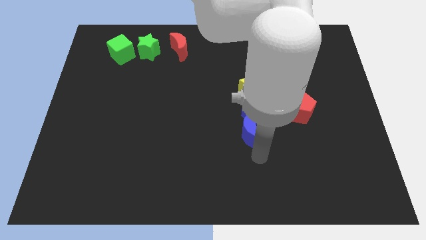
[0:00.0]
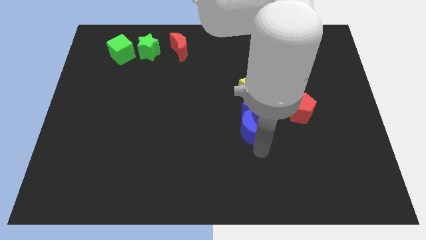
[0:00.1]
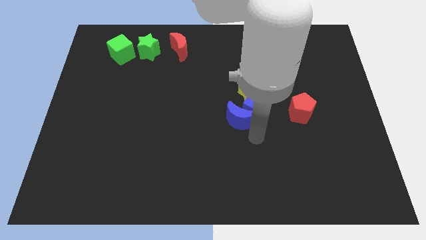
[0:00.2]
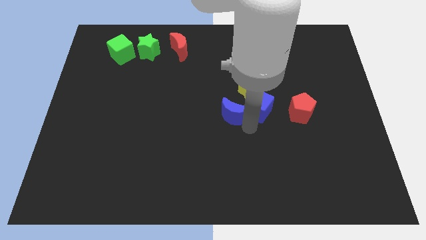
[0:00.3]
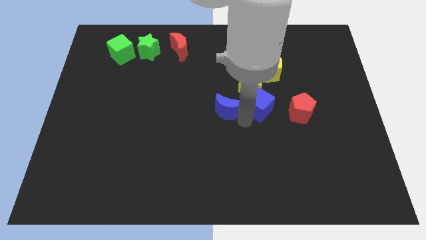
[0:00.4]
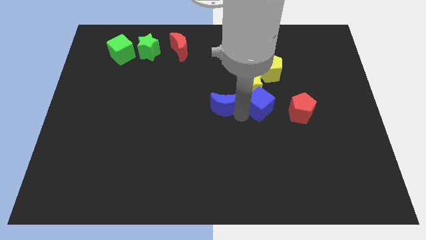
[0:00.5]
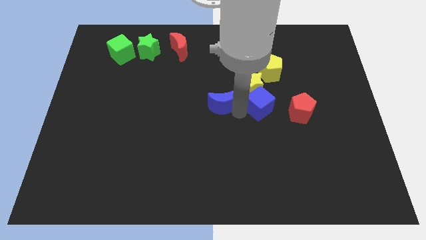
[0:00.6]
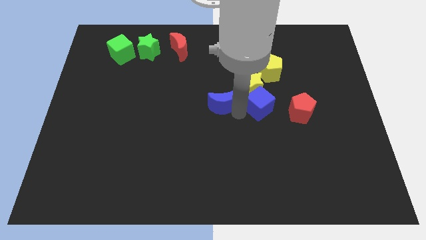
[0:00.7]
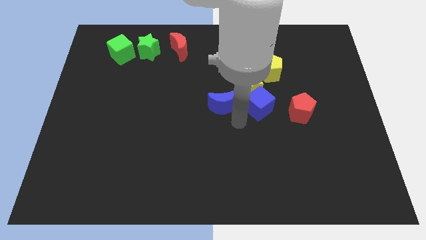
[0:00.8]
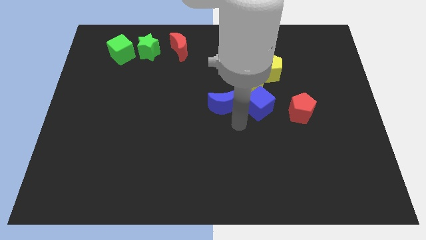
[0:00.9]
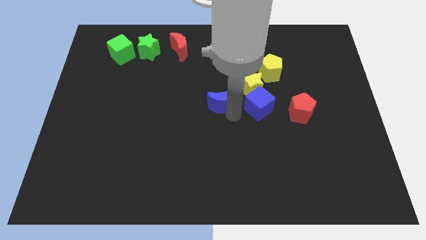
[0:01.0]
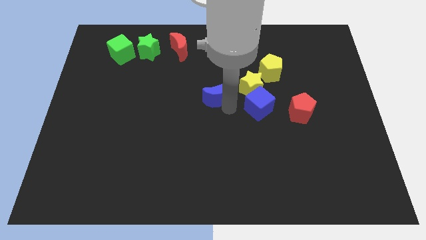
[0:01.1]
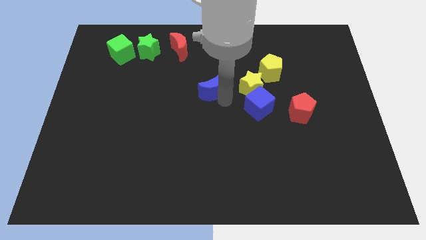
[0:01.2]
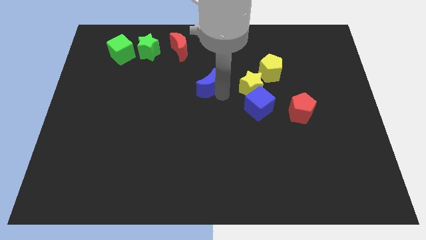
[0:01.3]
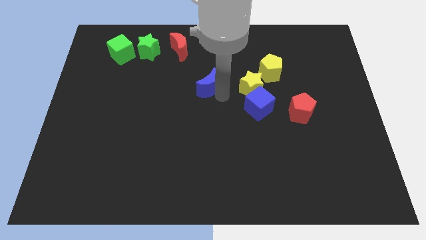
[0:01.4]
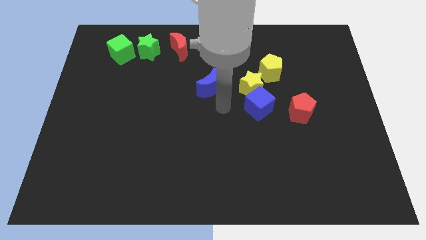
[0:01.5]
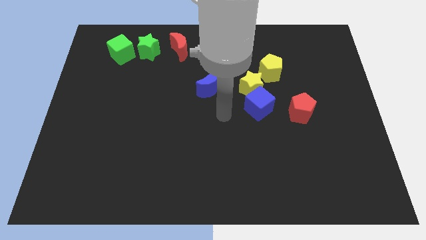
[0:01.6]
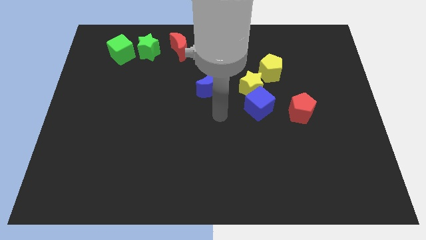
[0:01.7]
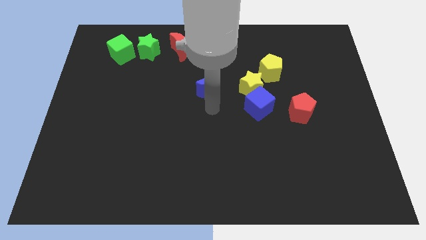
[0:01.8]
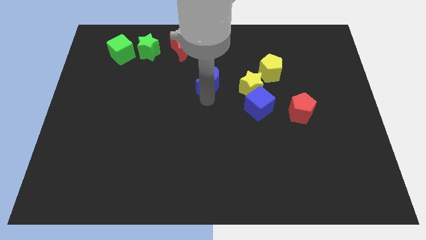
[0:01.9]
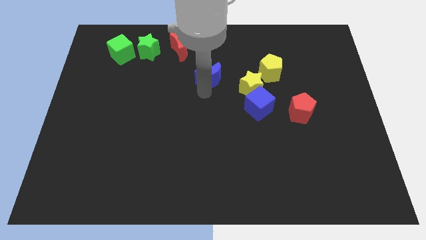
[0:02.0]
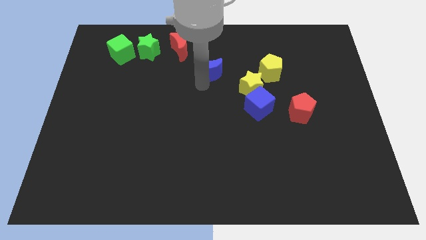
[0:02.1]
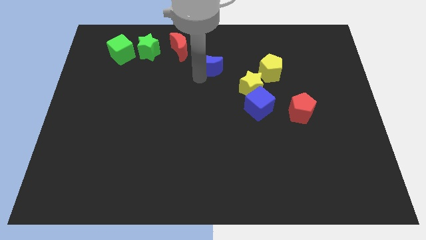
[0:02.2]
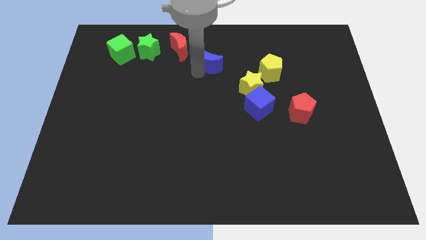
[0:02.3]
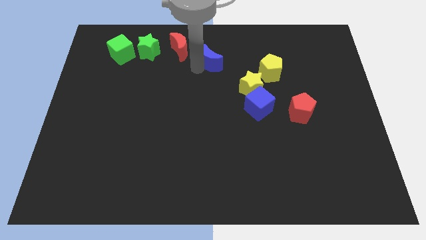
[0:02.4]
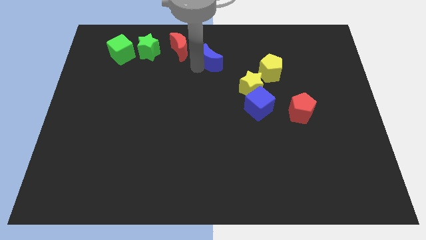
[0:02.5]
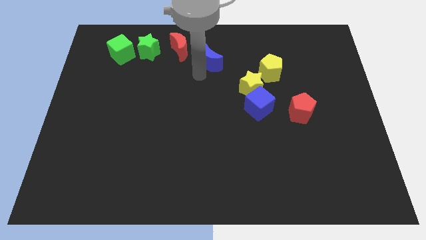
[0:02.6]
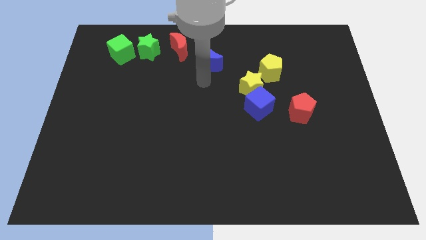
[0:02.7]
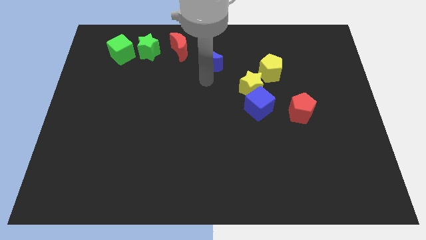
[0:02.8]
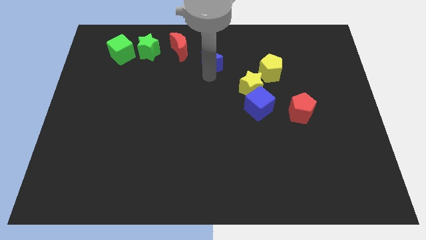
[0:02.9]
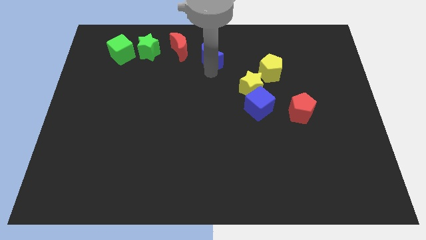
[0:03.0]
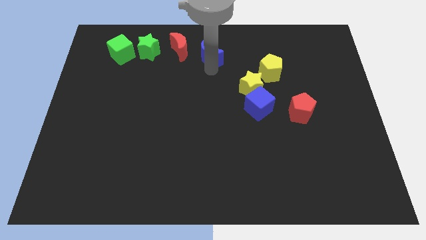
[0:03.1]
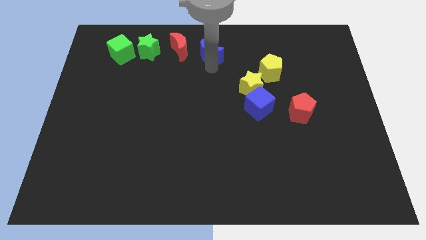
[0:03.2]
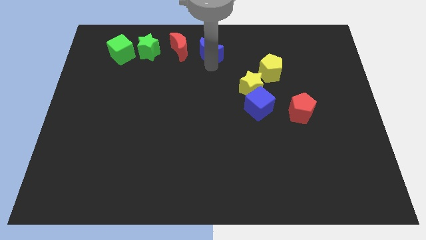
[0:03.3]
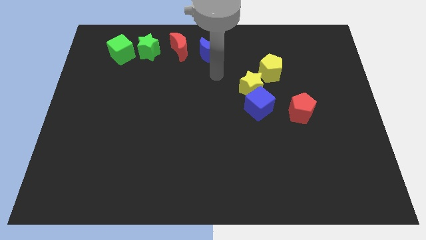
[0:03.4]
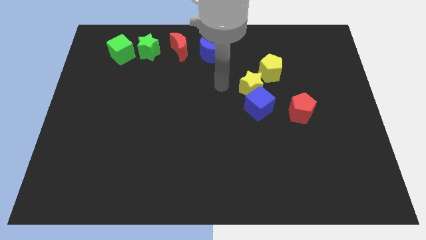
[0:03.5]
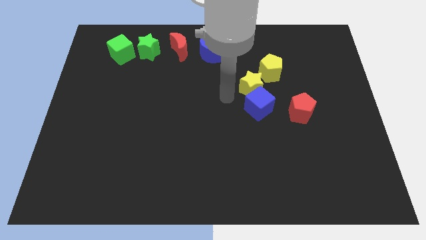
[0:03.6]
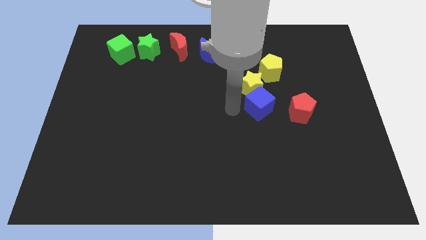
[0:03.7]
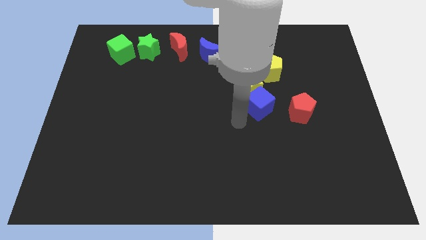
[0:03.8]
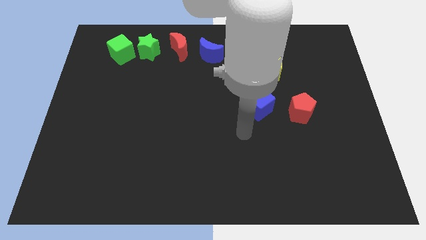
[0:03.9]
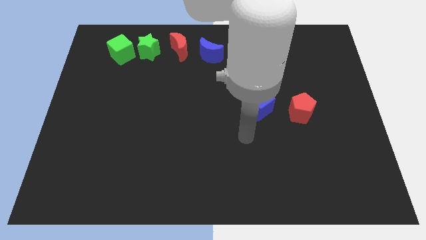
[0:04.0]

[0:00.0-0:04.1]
place the blue moon right to the red moon

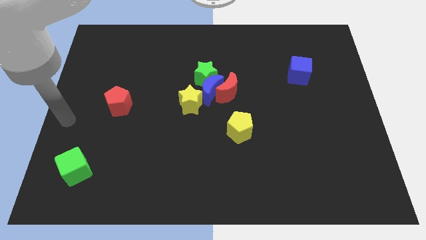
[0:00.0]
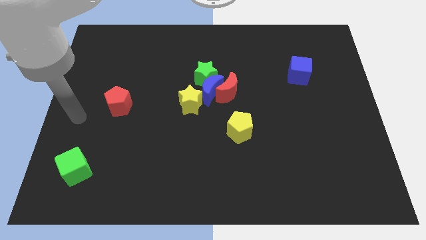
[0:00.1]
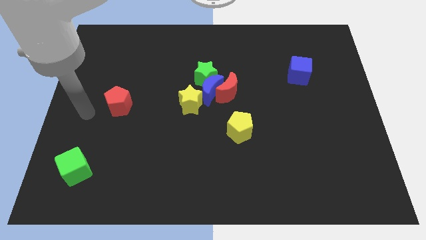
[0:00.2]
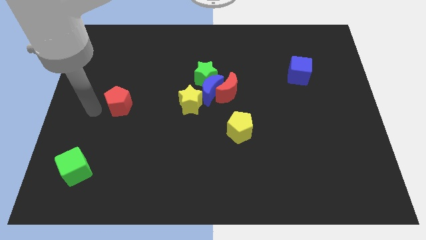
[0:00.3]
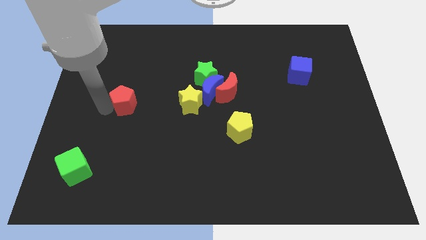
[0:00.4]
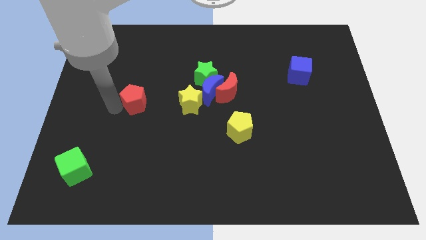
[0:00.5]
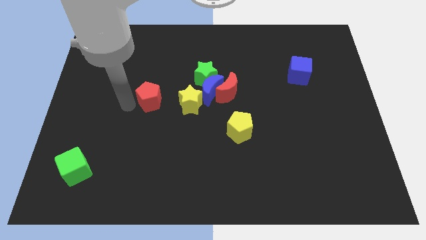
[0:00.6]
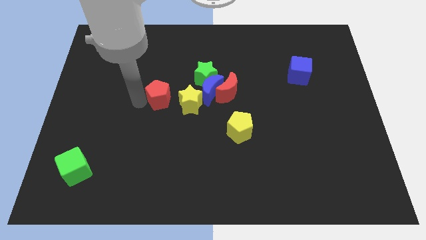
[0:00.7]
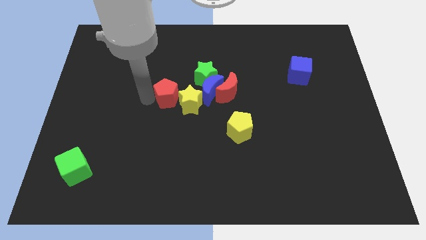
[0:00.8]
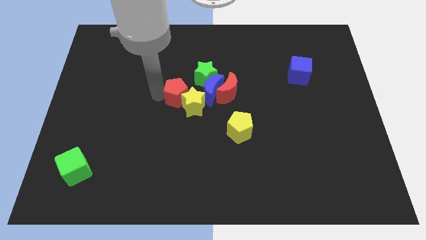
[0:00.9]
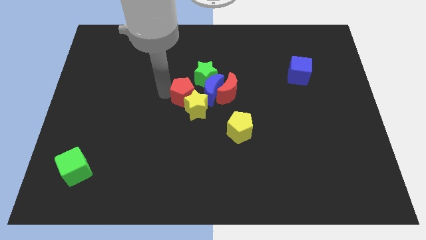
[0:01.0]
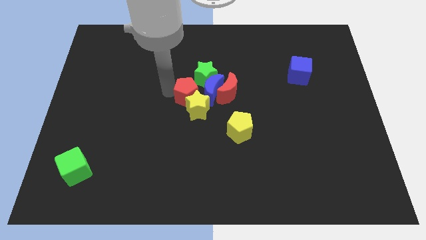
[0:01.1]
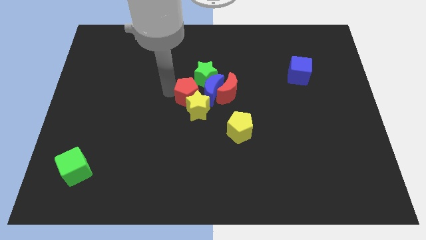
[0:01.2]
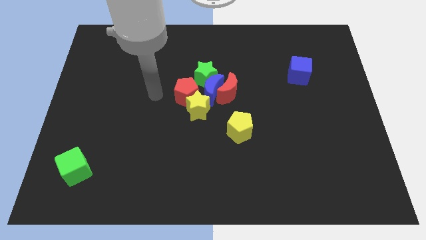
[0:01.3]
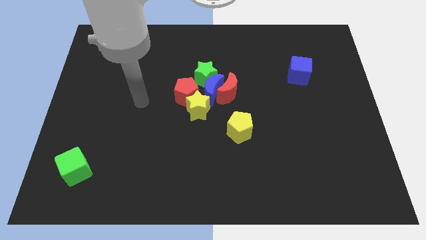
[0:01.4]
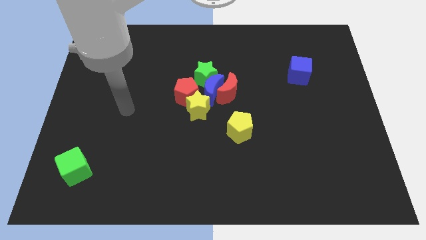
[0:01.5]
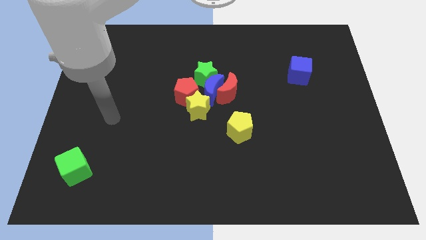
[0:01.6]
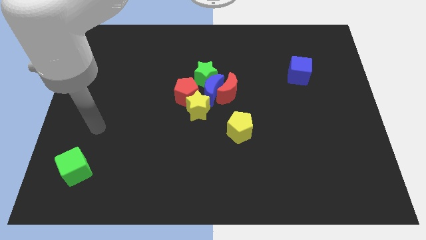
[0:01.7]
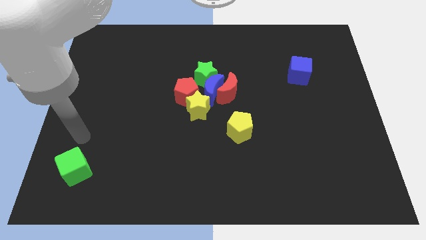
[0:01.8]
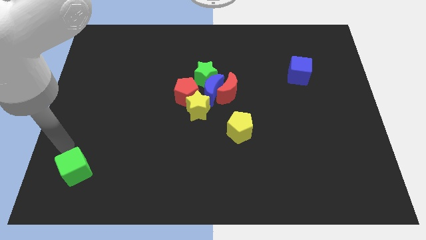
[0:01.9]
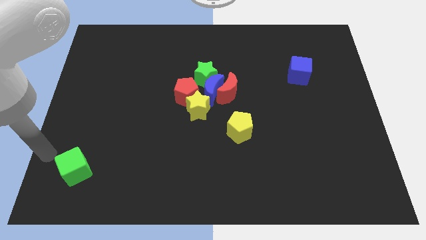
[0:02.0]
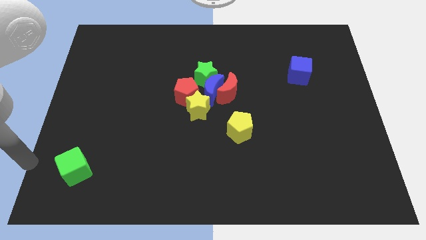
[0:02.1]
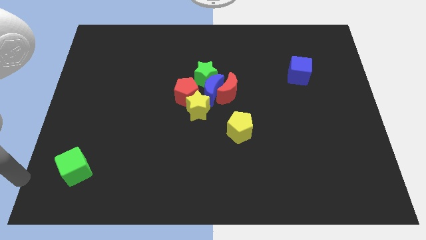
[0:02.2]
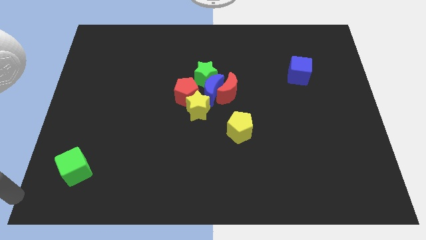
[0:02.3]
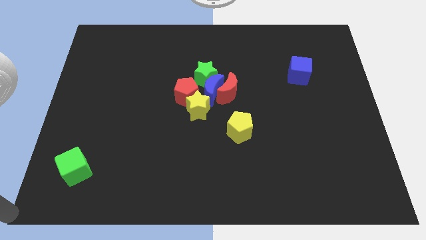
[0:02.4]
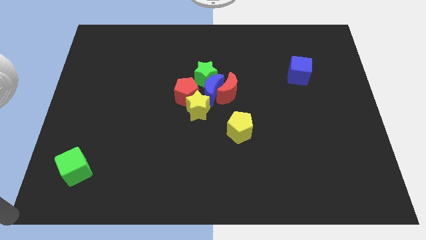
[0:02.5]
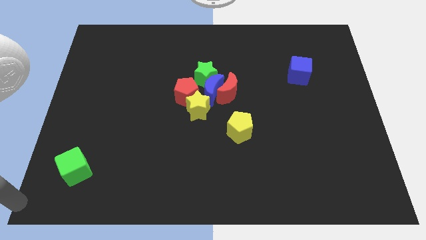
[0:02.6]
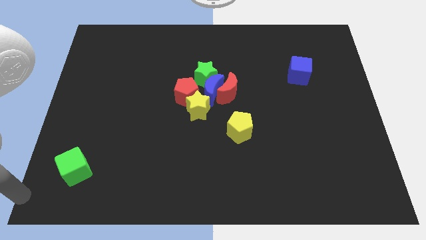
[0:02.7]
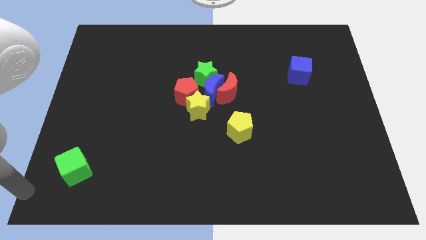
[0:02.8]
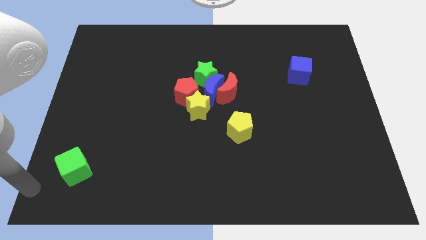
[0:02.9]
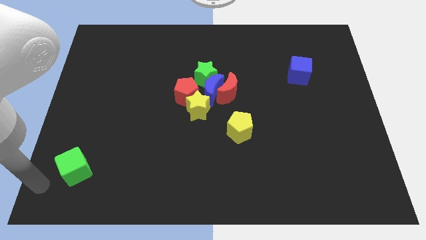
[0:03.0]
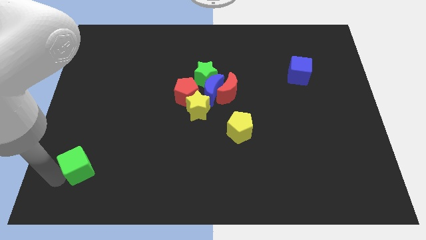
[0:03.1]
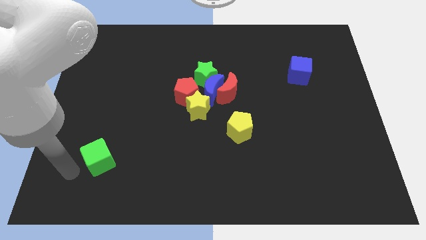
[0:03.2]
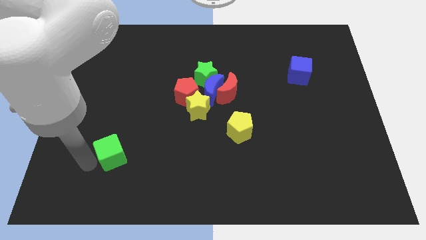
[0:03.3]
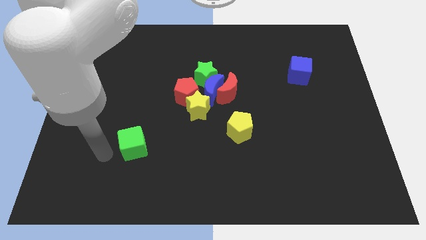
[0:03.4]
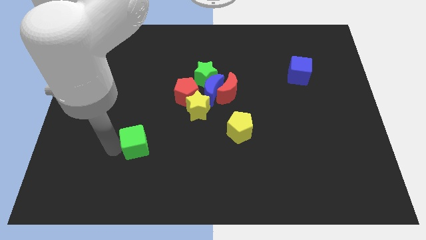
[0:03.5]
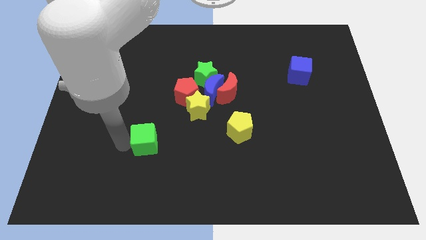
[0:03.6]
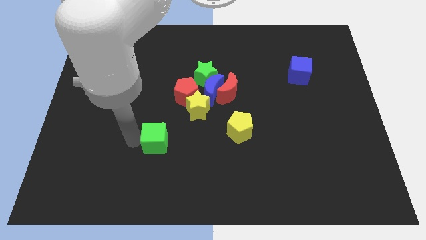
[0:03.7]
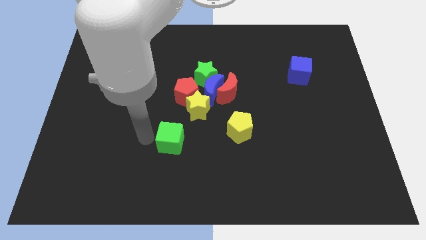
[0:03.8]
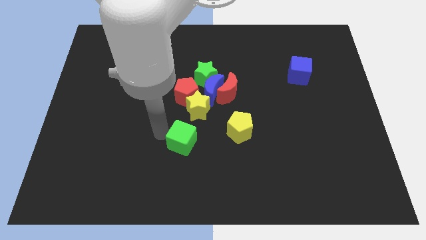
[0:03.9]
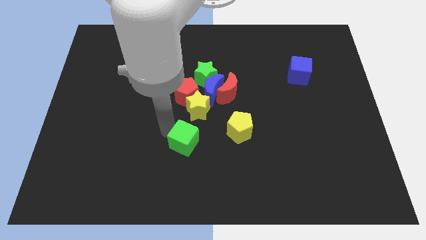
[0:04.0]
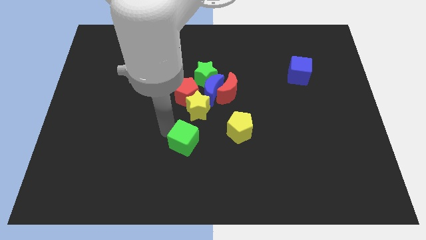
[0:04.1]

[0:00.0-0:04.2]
place the green cube left to the yellow pentagon

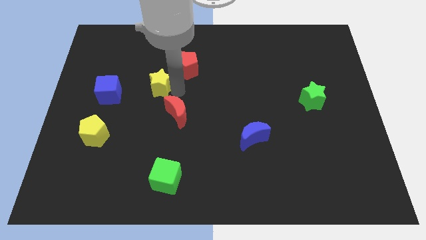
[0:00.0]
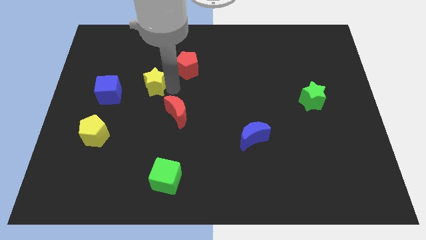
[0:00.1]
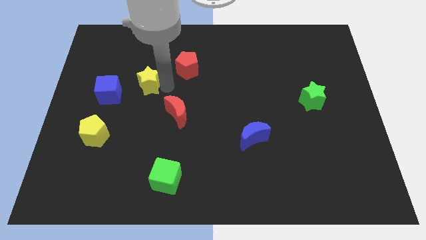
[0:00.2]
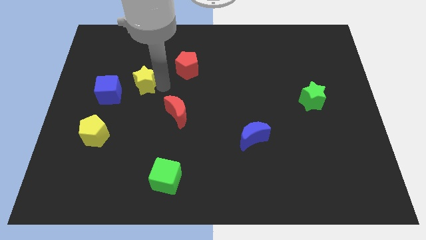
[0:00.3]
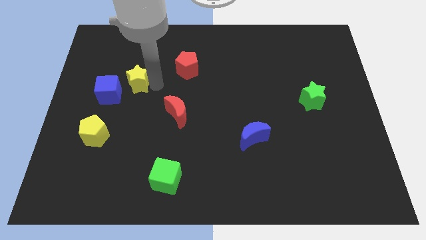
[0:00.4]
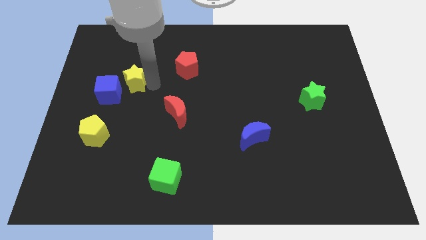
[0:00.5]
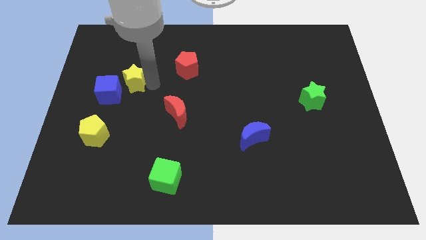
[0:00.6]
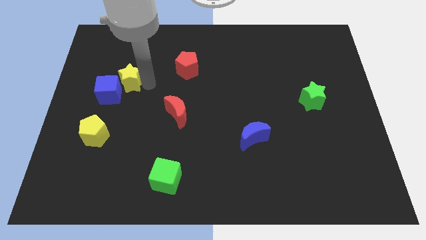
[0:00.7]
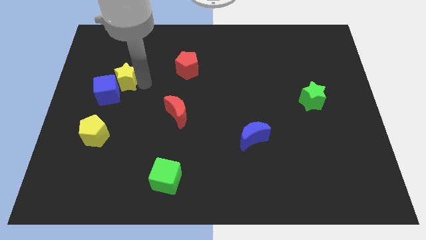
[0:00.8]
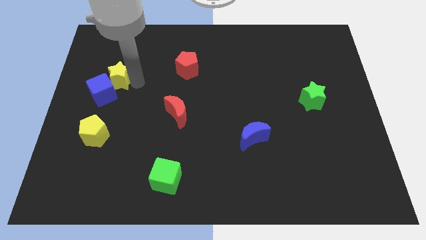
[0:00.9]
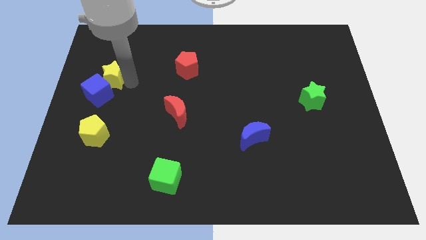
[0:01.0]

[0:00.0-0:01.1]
push the yellow star into the blue cube
